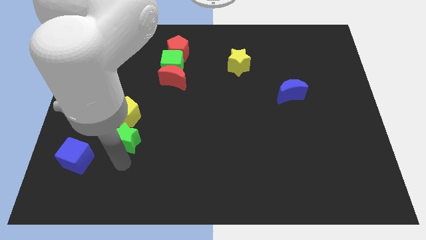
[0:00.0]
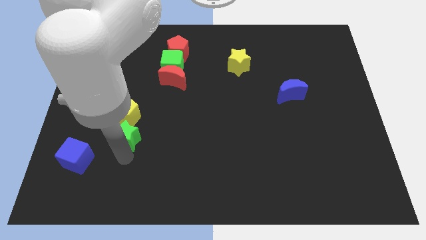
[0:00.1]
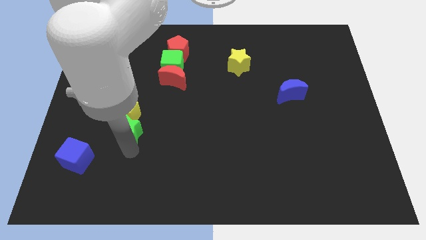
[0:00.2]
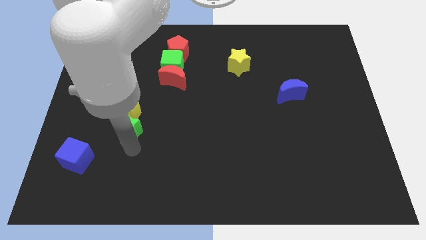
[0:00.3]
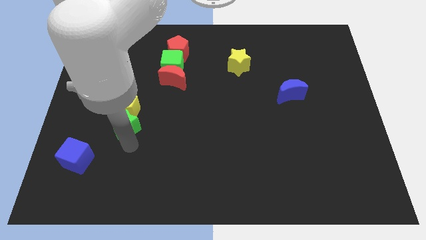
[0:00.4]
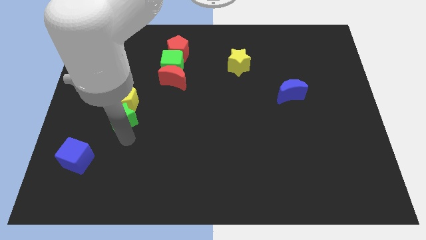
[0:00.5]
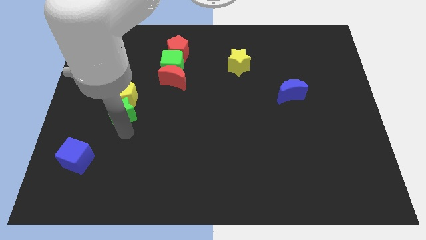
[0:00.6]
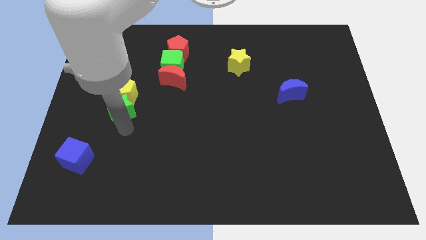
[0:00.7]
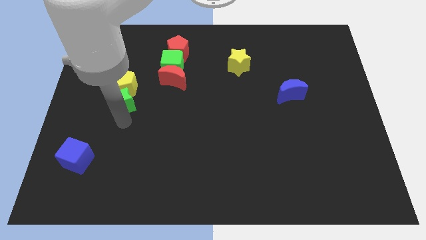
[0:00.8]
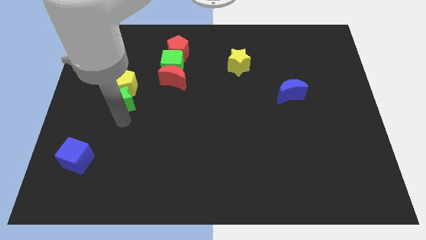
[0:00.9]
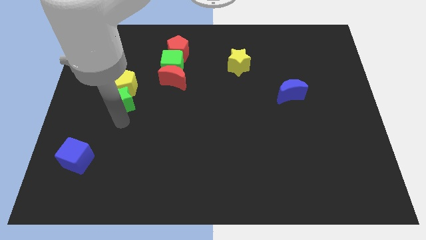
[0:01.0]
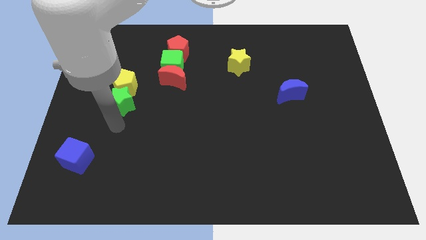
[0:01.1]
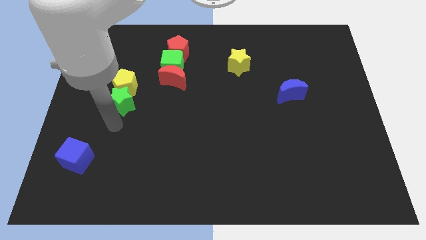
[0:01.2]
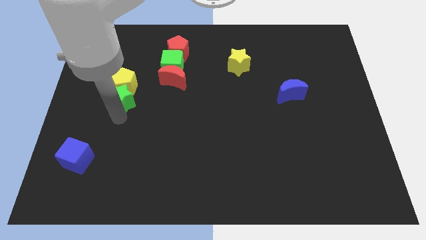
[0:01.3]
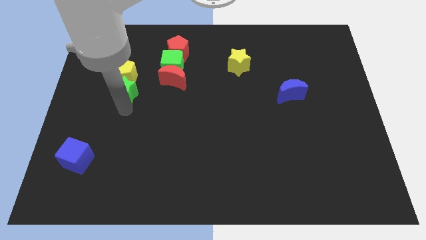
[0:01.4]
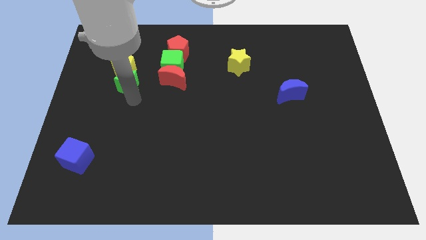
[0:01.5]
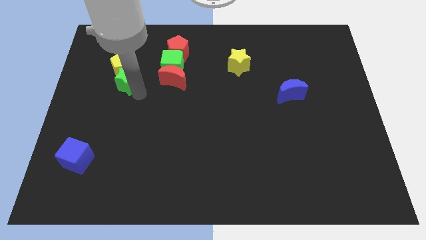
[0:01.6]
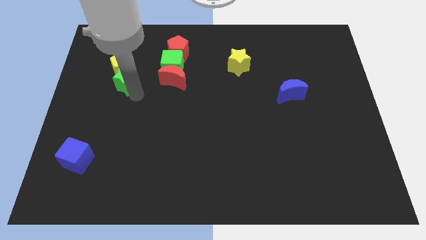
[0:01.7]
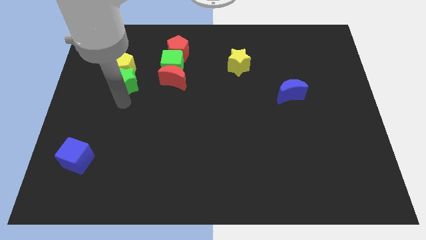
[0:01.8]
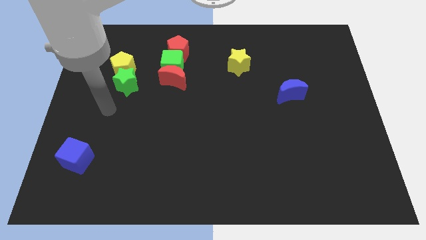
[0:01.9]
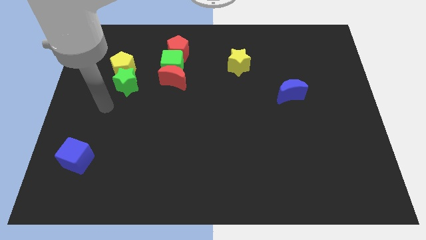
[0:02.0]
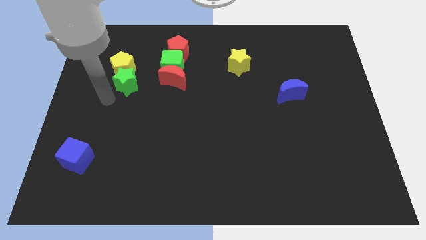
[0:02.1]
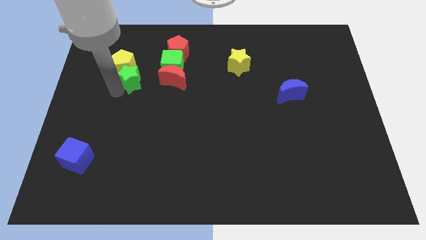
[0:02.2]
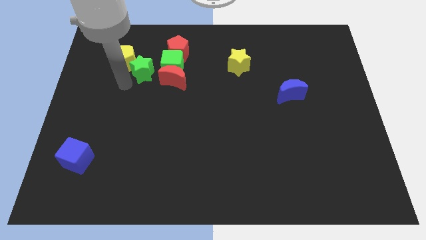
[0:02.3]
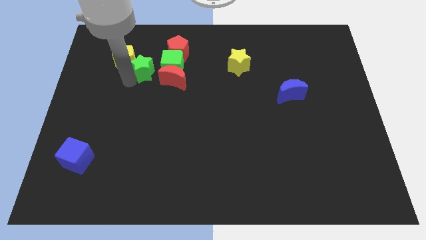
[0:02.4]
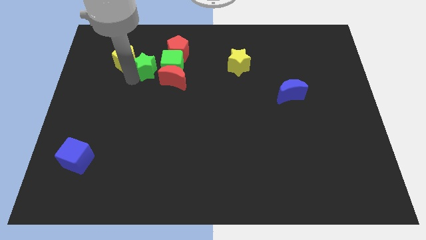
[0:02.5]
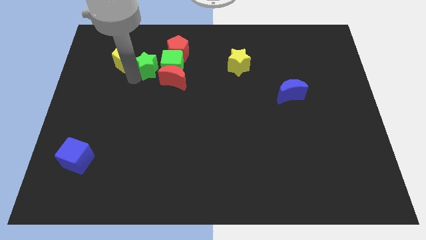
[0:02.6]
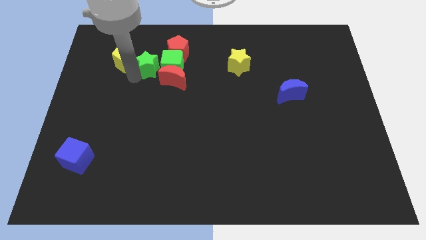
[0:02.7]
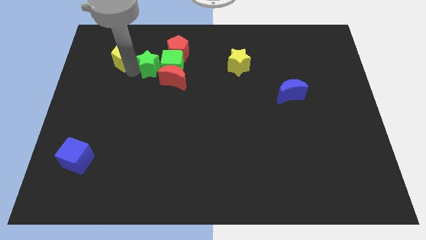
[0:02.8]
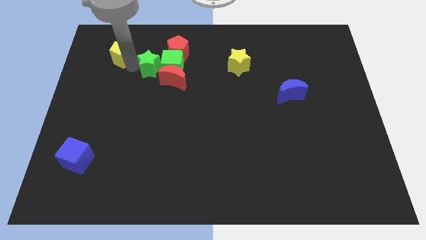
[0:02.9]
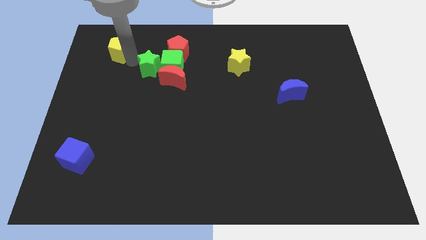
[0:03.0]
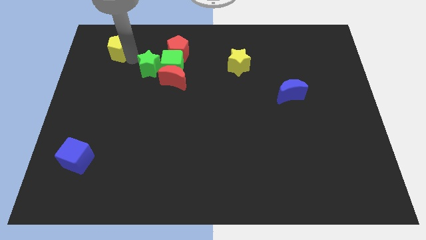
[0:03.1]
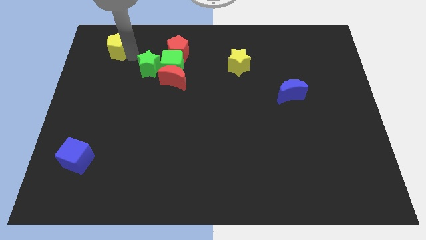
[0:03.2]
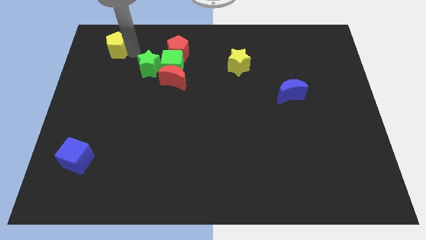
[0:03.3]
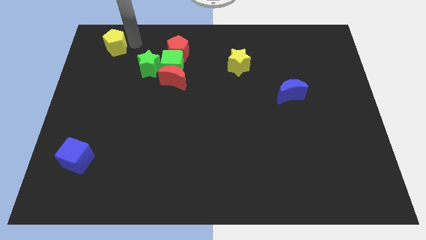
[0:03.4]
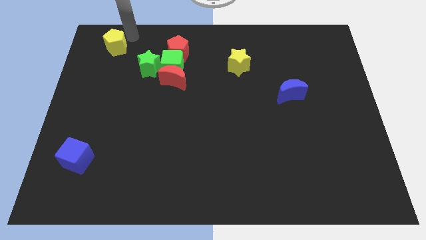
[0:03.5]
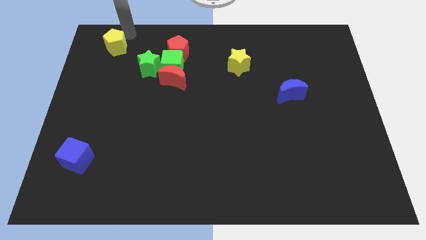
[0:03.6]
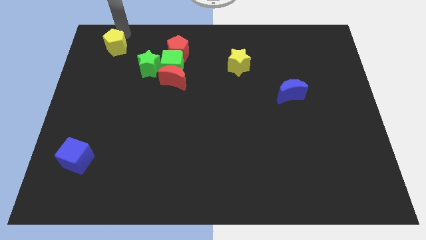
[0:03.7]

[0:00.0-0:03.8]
move the green star and yellow pentagon diagonally on the top left side of the red crescent

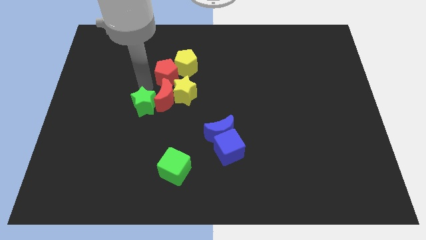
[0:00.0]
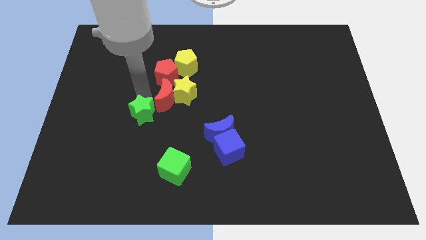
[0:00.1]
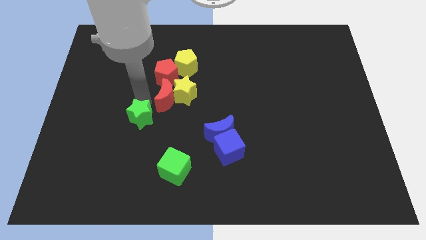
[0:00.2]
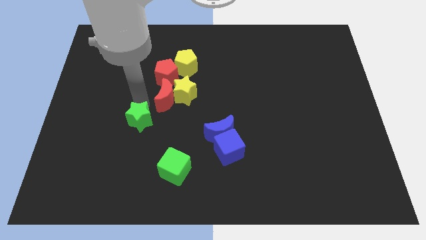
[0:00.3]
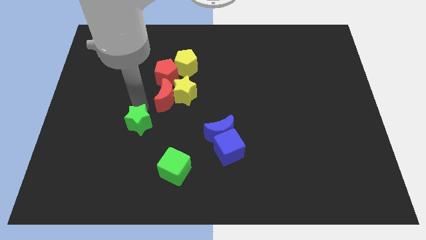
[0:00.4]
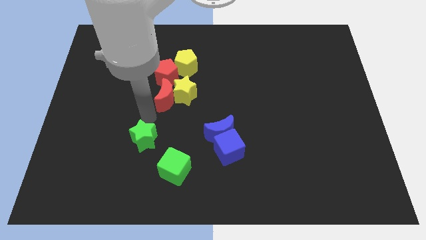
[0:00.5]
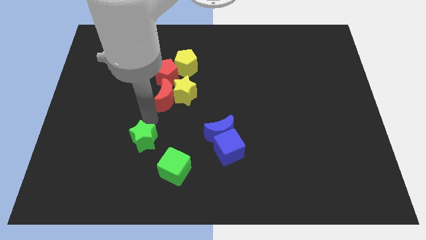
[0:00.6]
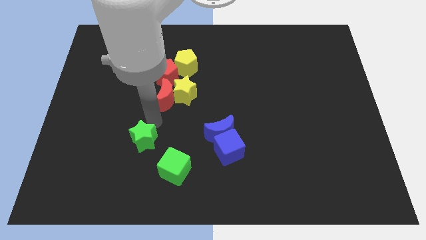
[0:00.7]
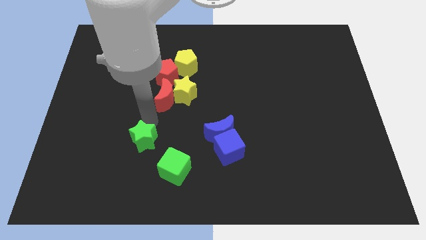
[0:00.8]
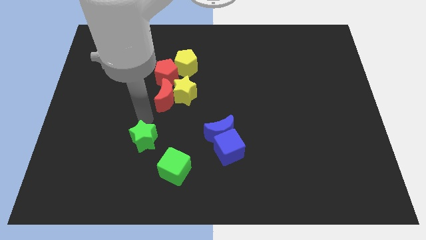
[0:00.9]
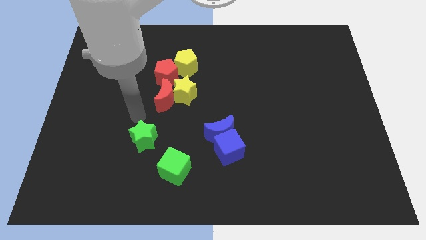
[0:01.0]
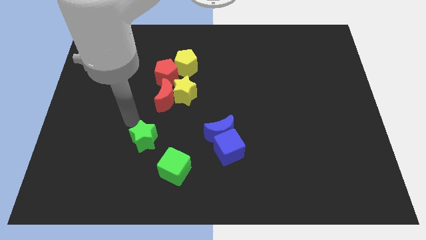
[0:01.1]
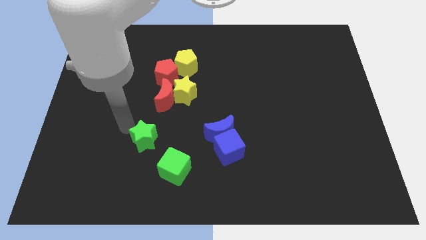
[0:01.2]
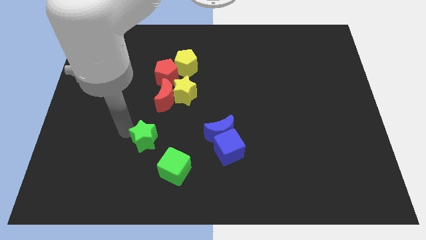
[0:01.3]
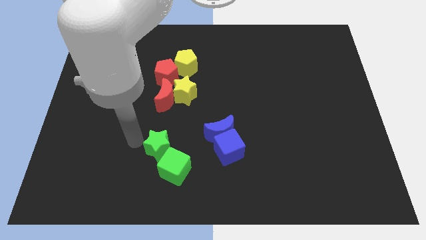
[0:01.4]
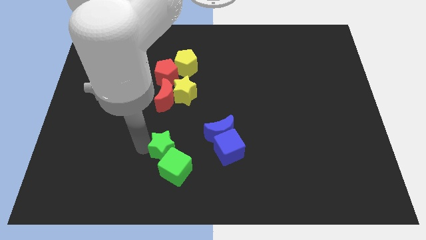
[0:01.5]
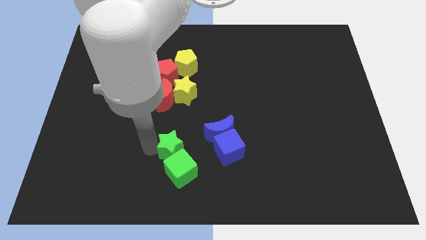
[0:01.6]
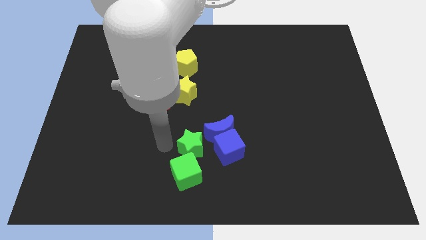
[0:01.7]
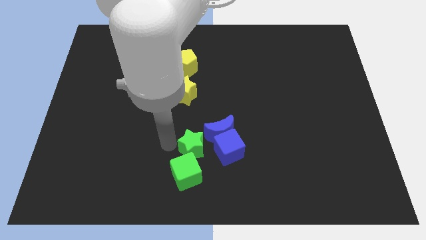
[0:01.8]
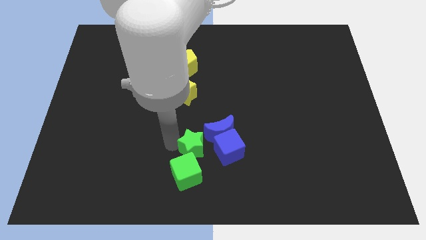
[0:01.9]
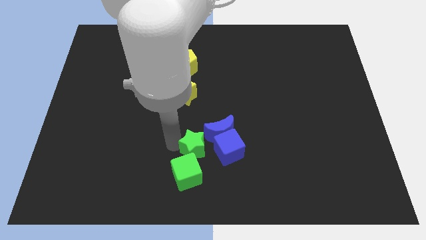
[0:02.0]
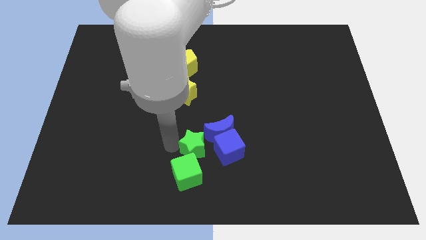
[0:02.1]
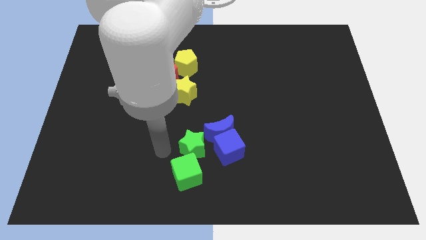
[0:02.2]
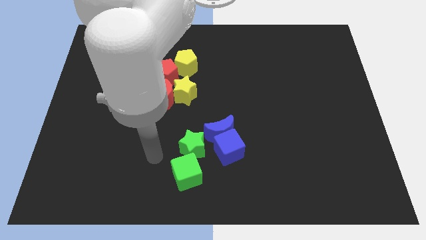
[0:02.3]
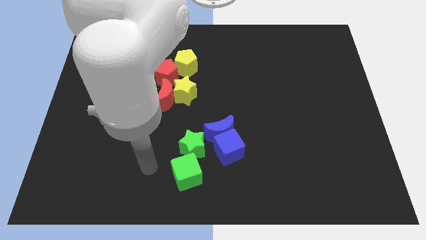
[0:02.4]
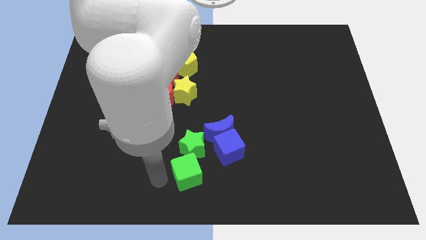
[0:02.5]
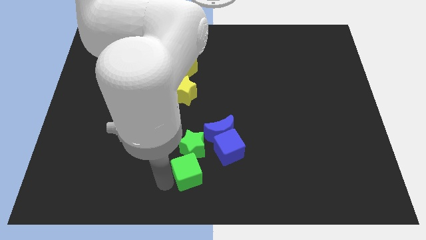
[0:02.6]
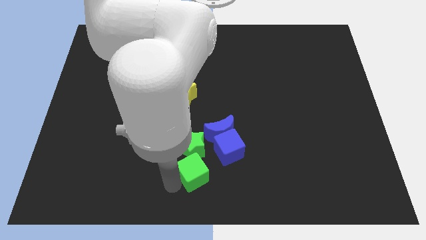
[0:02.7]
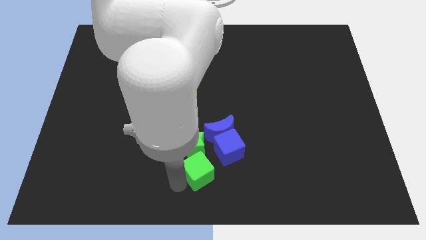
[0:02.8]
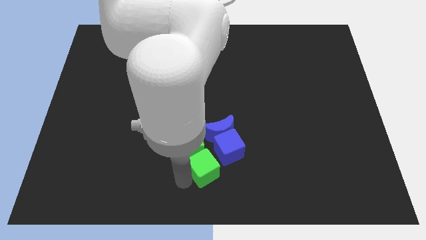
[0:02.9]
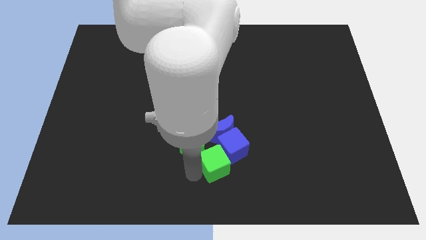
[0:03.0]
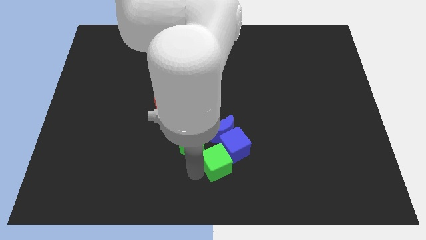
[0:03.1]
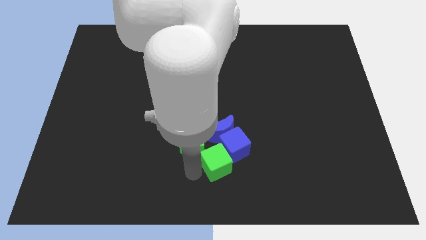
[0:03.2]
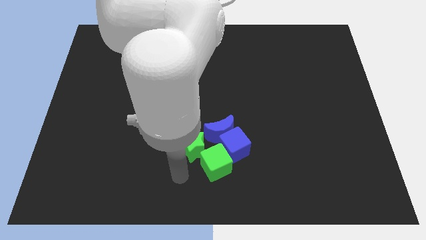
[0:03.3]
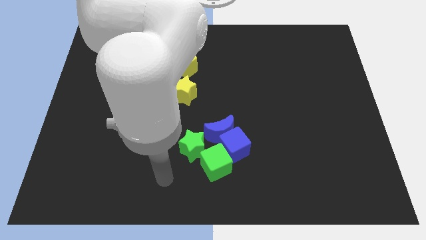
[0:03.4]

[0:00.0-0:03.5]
move the green star with green cube into blue blocks

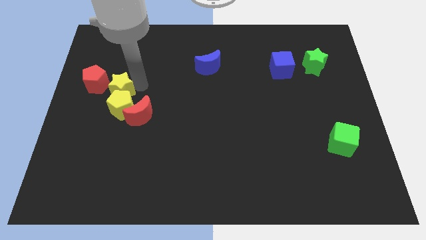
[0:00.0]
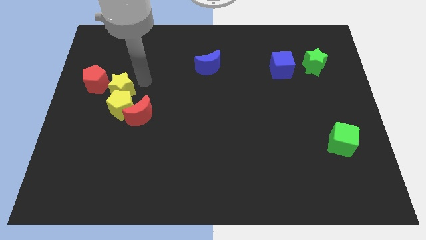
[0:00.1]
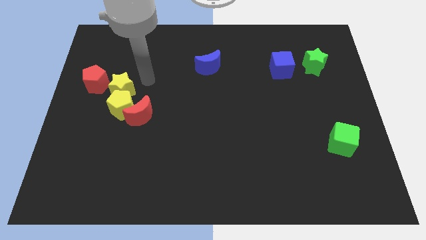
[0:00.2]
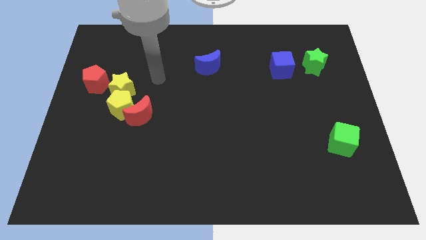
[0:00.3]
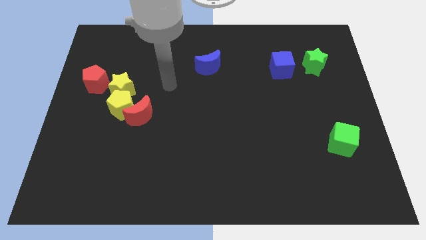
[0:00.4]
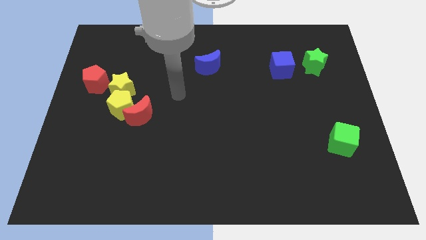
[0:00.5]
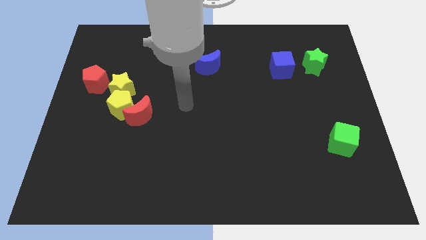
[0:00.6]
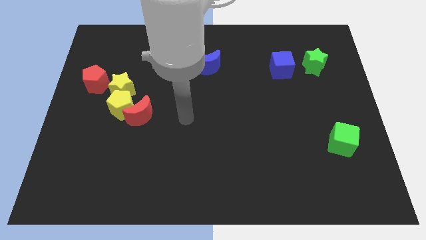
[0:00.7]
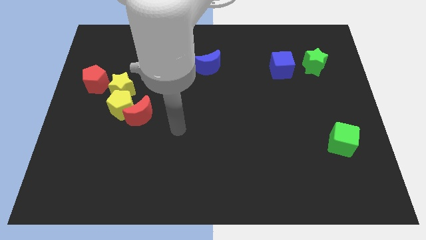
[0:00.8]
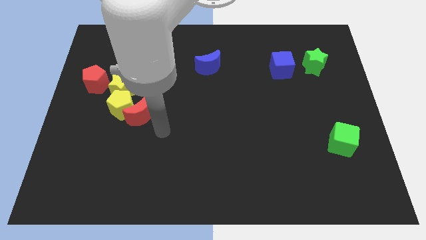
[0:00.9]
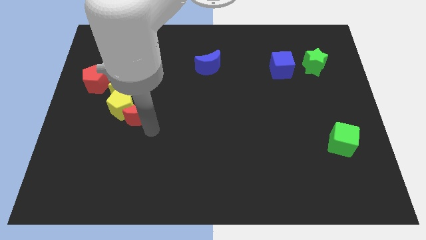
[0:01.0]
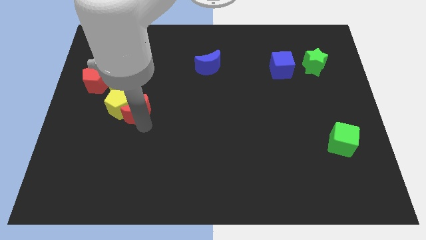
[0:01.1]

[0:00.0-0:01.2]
push the red crescent into the yellow pentagon

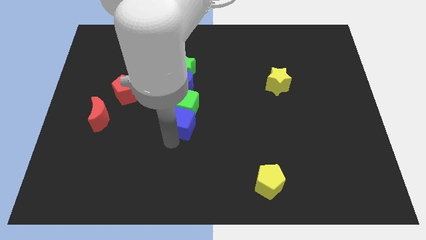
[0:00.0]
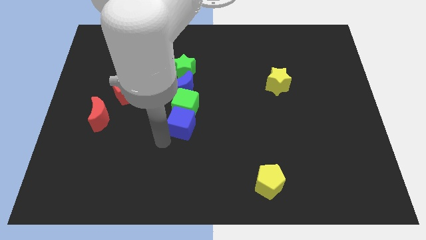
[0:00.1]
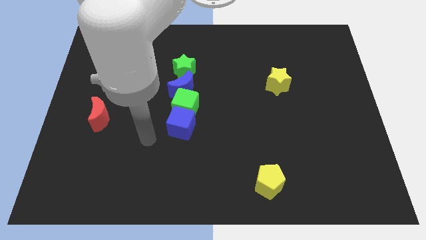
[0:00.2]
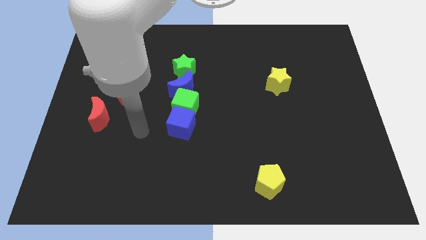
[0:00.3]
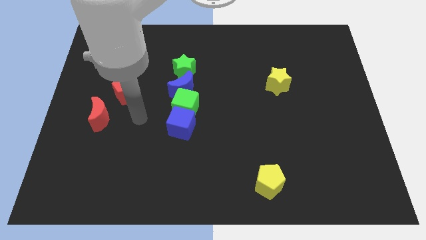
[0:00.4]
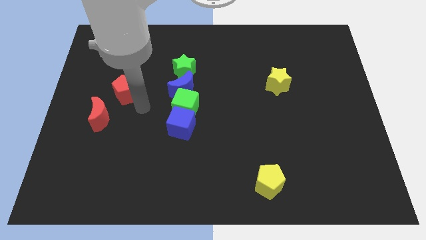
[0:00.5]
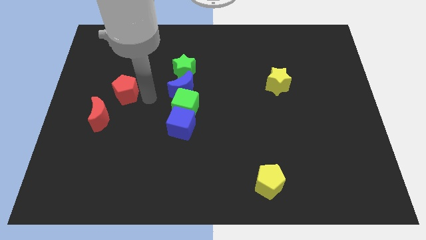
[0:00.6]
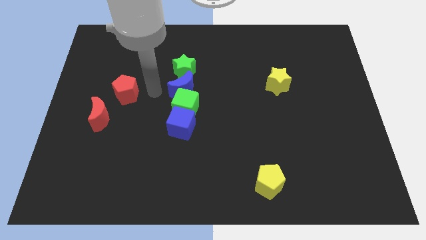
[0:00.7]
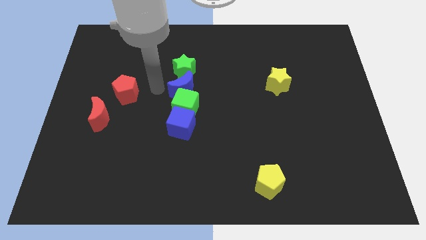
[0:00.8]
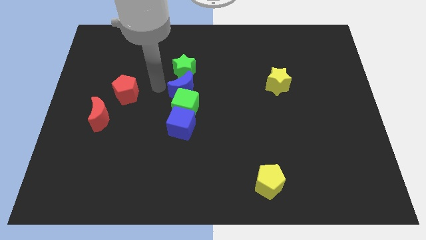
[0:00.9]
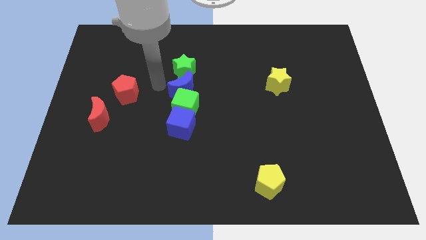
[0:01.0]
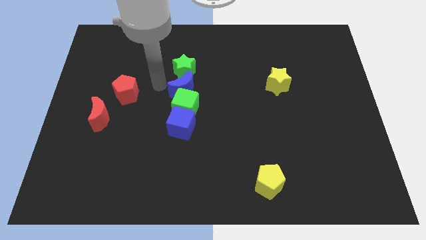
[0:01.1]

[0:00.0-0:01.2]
point your arm at the left of the blue crescent
